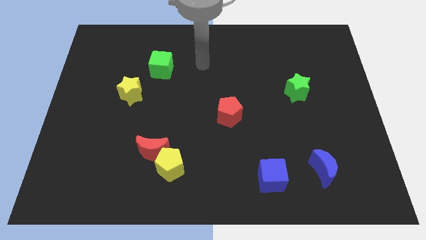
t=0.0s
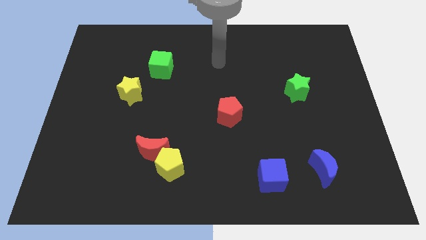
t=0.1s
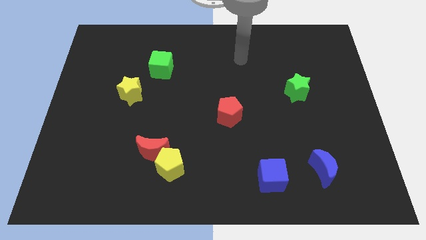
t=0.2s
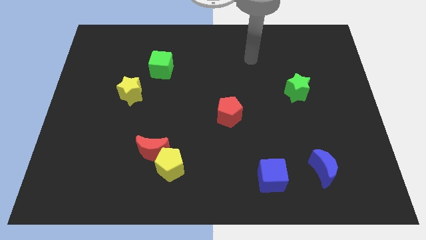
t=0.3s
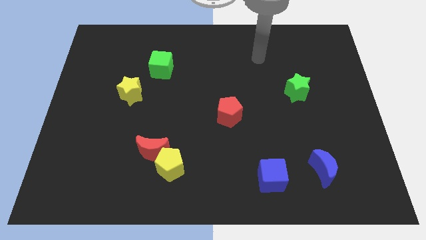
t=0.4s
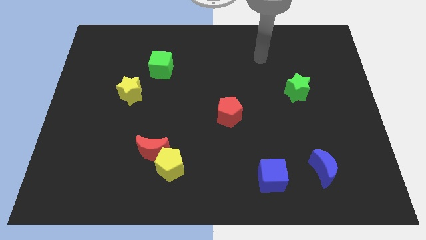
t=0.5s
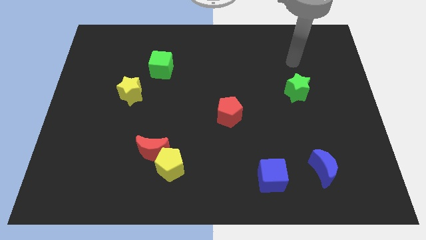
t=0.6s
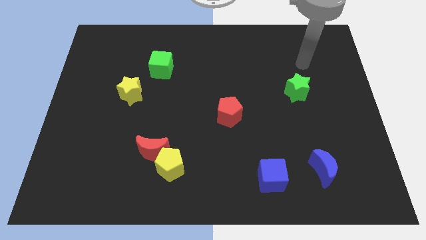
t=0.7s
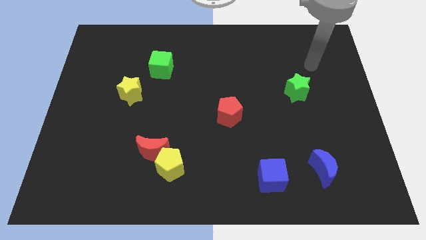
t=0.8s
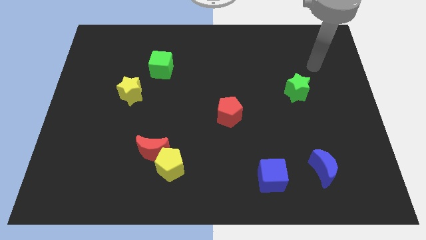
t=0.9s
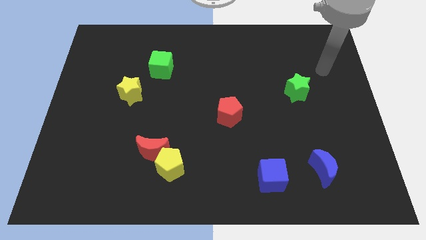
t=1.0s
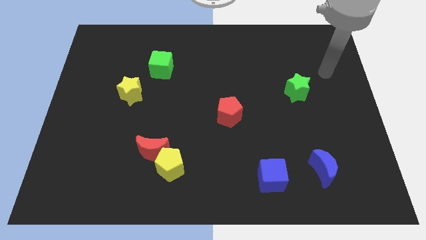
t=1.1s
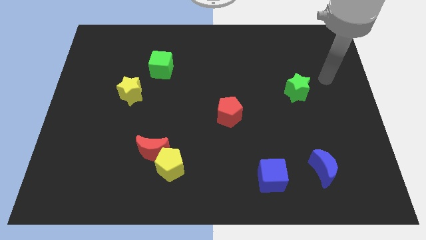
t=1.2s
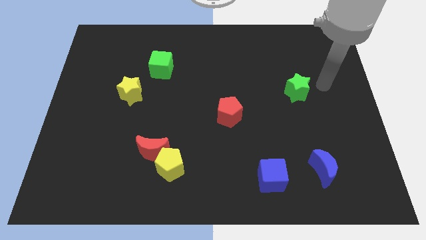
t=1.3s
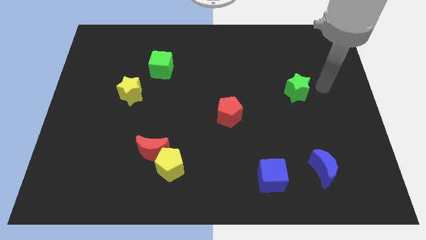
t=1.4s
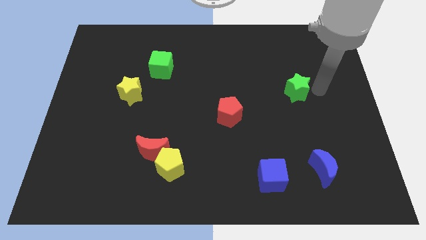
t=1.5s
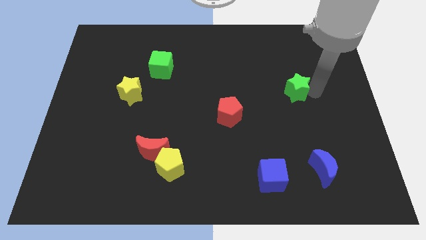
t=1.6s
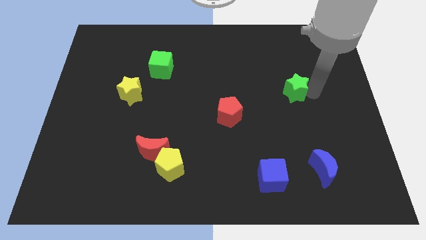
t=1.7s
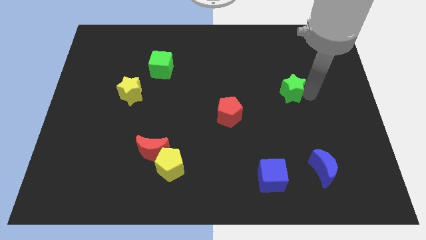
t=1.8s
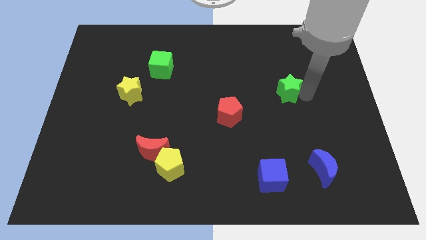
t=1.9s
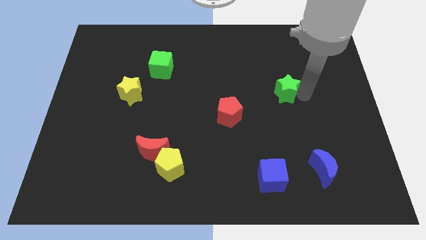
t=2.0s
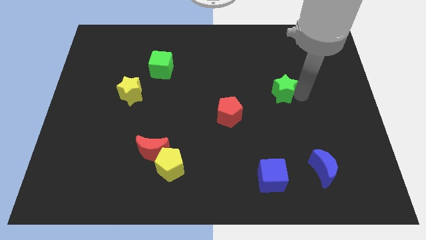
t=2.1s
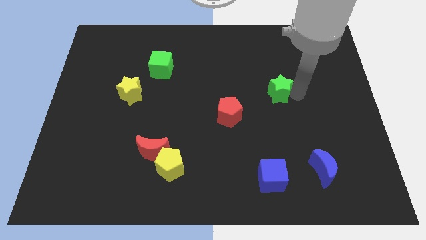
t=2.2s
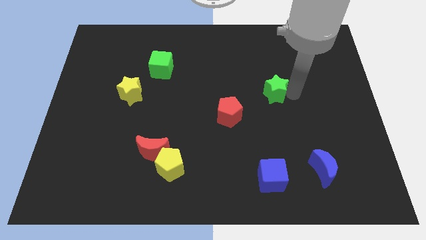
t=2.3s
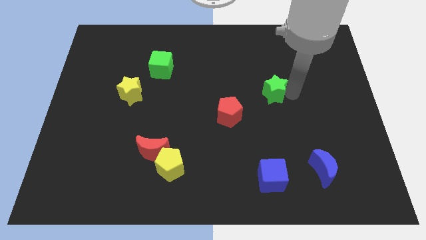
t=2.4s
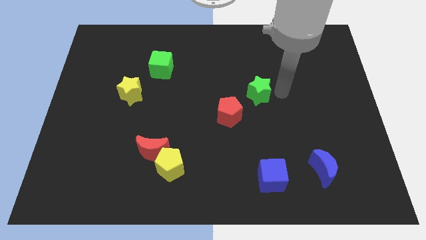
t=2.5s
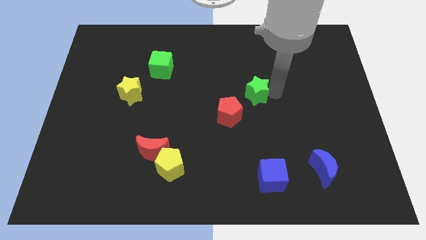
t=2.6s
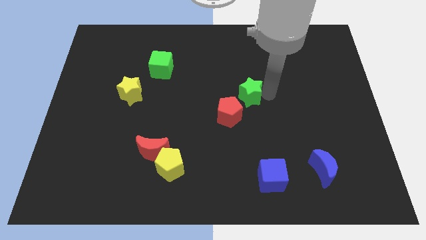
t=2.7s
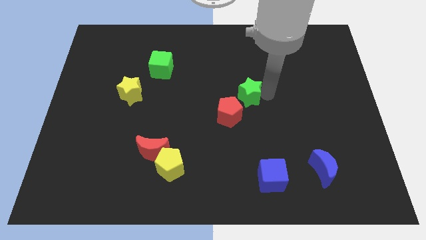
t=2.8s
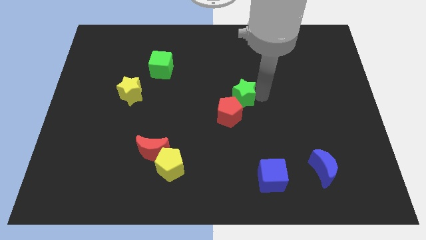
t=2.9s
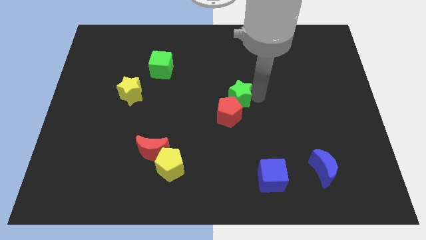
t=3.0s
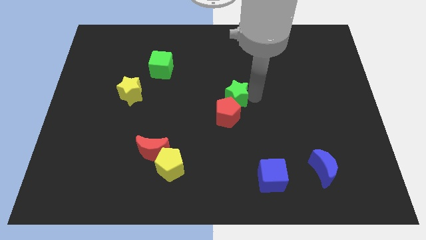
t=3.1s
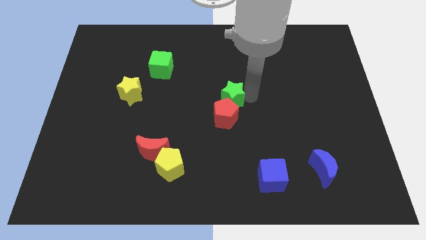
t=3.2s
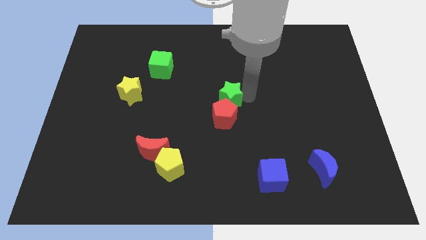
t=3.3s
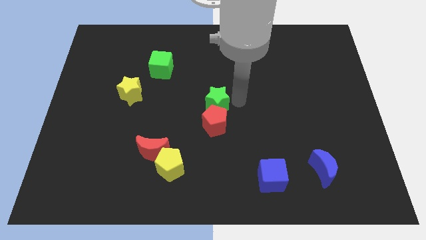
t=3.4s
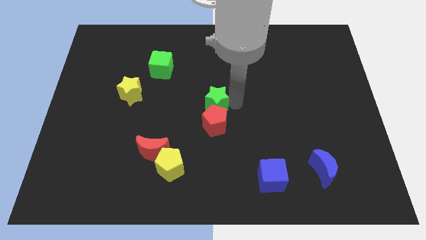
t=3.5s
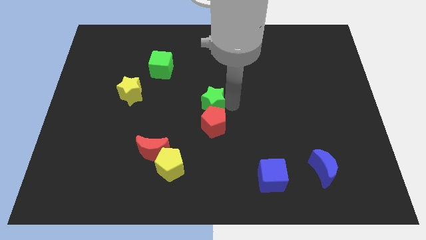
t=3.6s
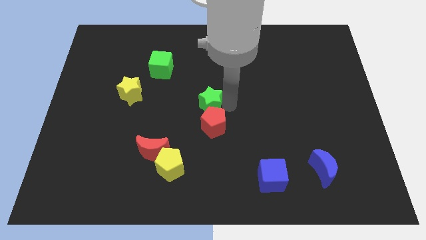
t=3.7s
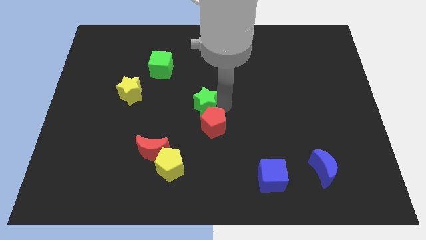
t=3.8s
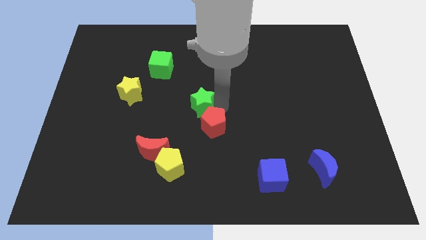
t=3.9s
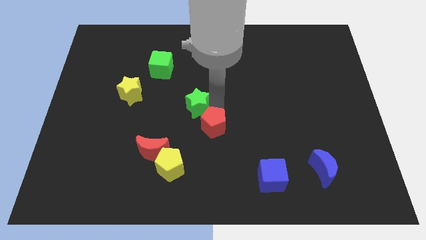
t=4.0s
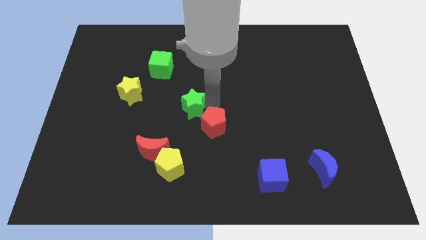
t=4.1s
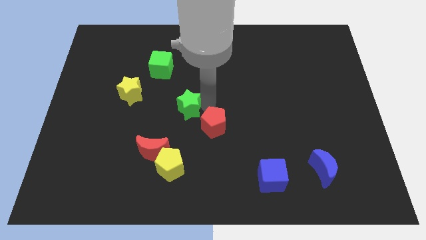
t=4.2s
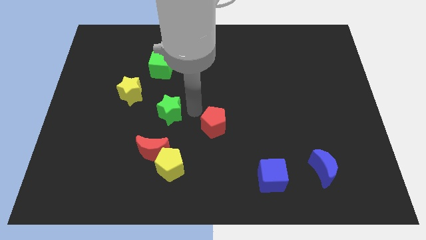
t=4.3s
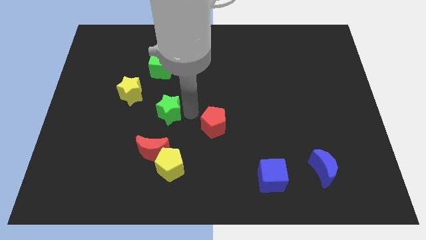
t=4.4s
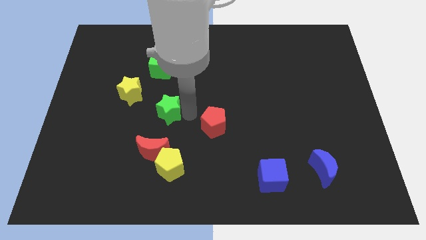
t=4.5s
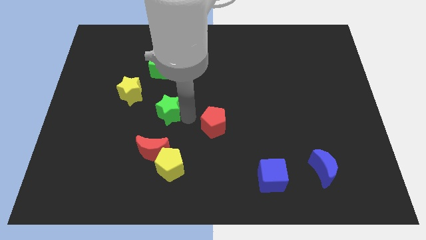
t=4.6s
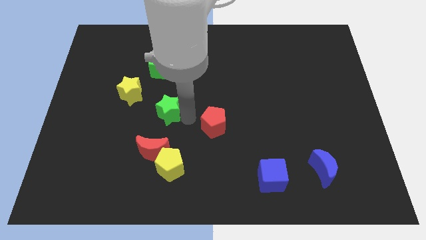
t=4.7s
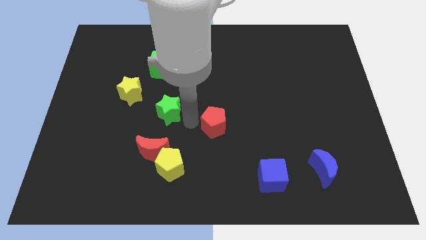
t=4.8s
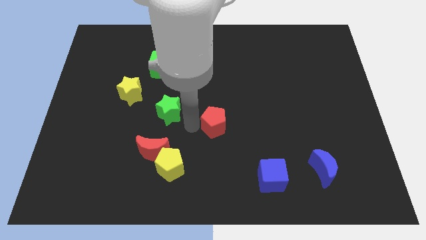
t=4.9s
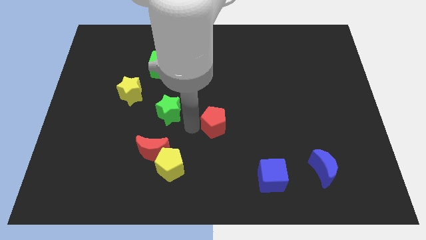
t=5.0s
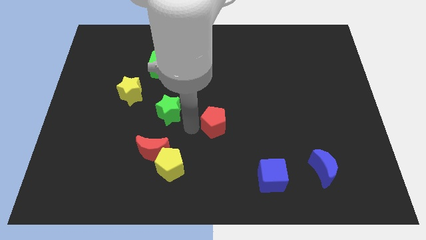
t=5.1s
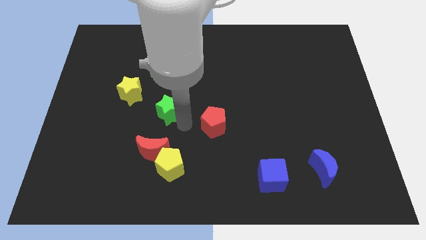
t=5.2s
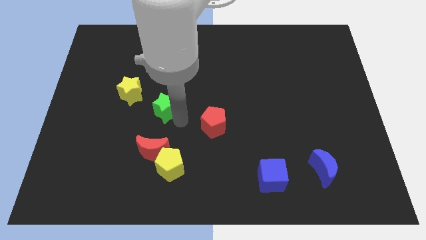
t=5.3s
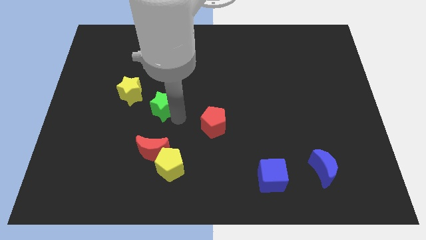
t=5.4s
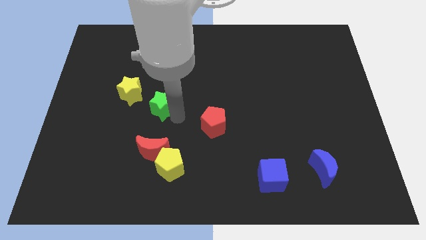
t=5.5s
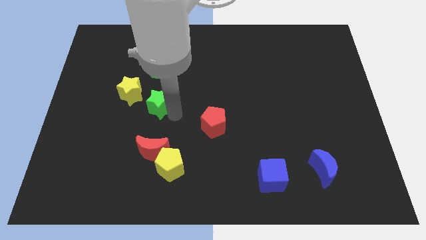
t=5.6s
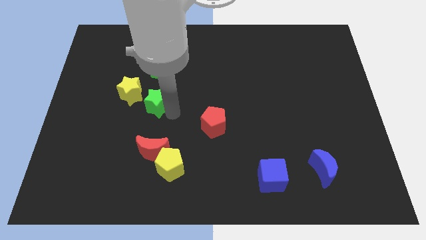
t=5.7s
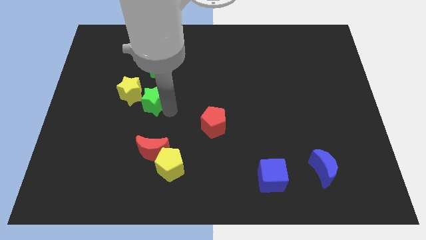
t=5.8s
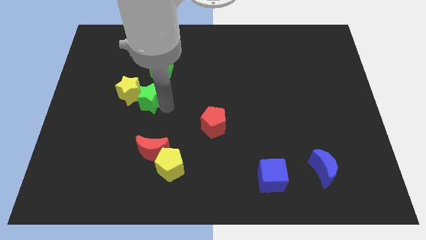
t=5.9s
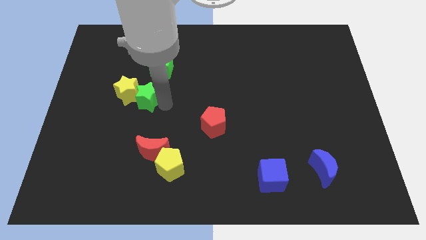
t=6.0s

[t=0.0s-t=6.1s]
put the green star next to the yellow star

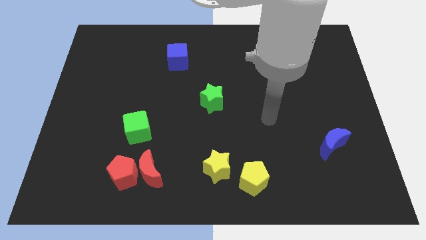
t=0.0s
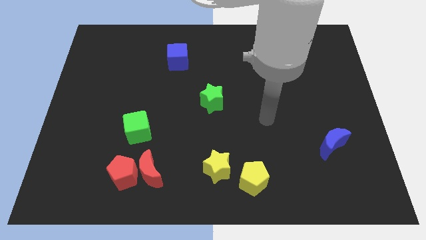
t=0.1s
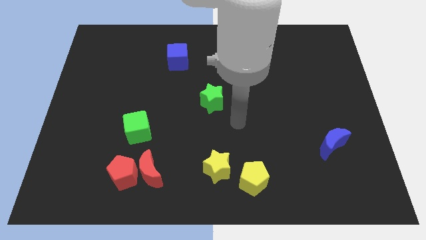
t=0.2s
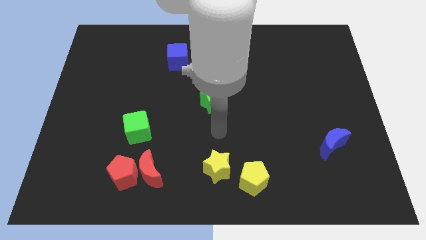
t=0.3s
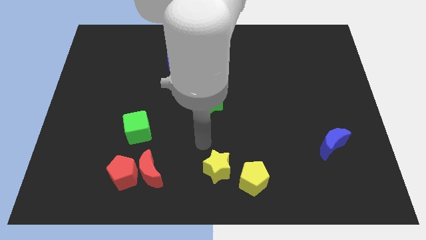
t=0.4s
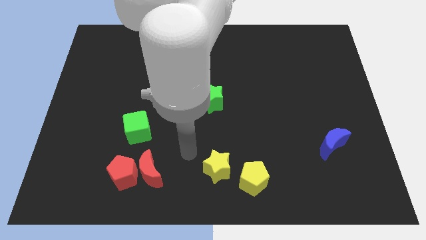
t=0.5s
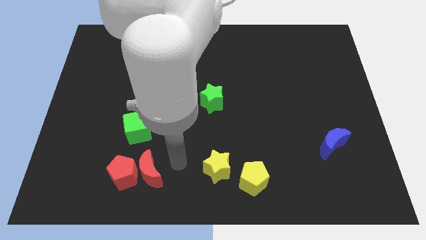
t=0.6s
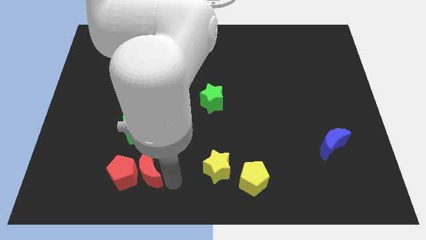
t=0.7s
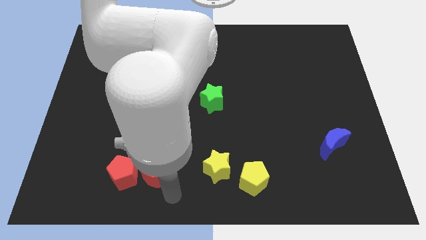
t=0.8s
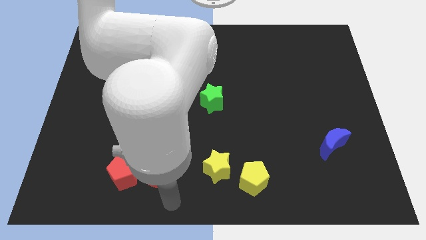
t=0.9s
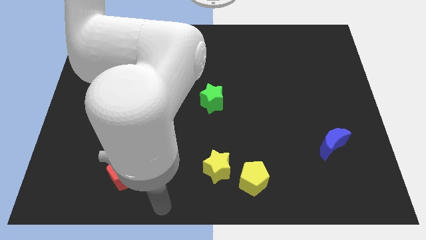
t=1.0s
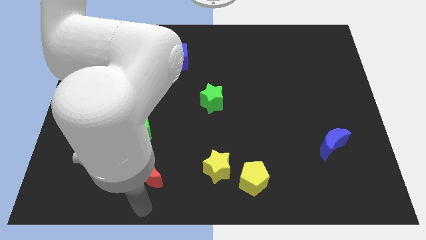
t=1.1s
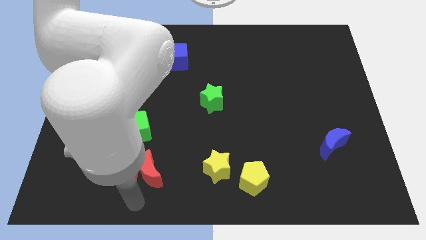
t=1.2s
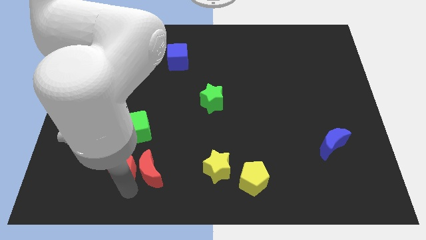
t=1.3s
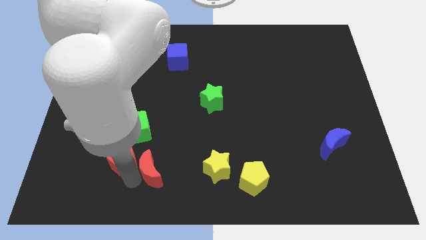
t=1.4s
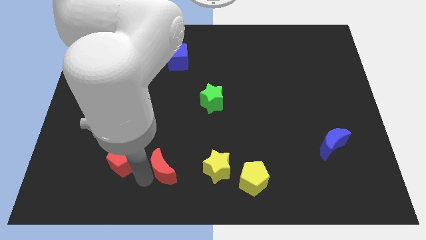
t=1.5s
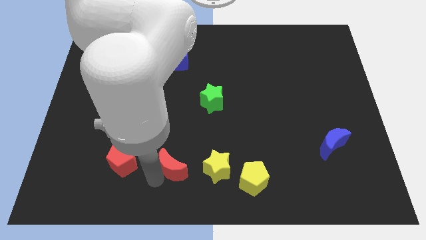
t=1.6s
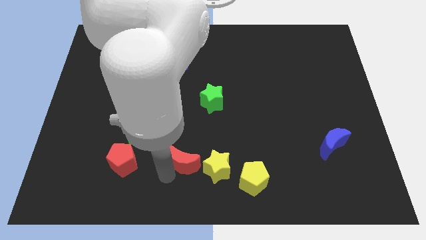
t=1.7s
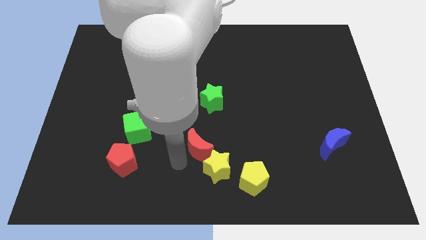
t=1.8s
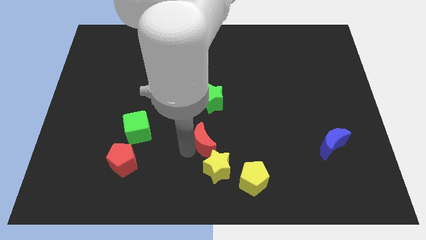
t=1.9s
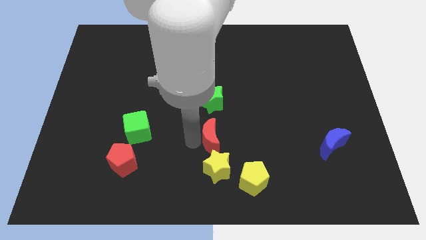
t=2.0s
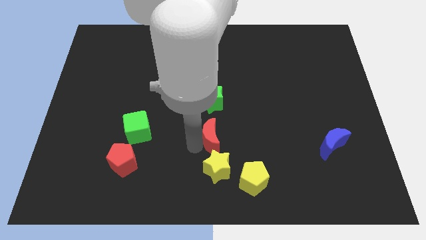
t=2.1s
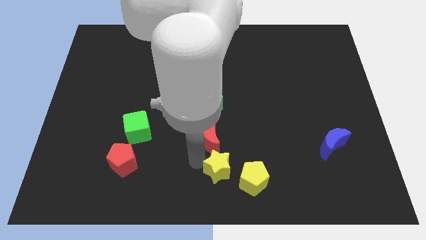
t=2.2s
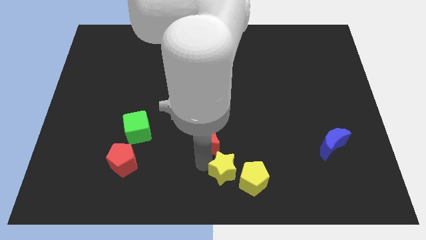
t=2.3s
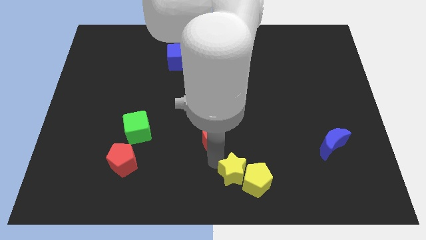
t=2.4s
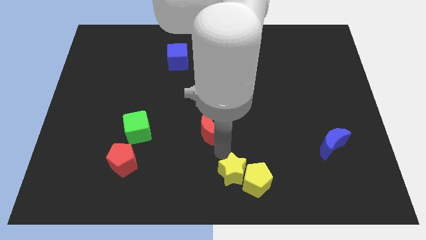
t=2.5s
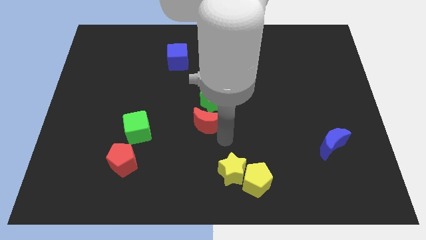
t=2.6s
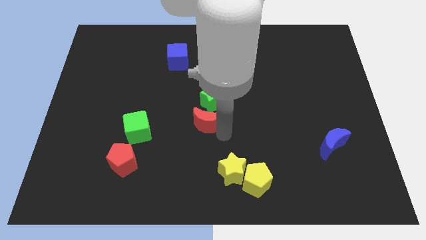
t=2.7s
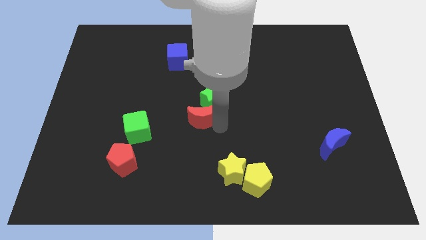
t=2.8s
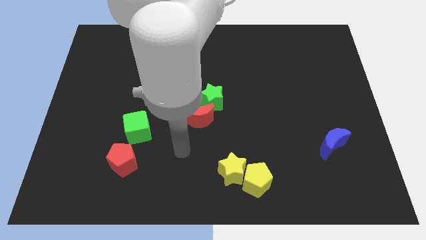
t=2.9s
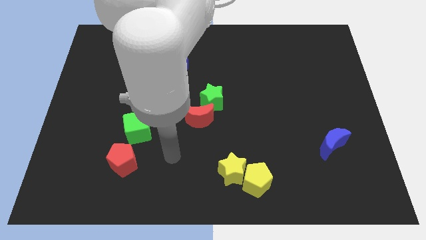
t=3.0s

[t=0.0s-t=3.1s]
put the red moon towards the green star
